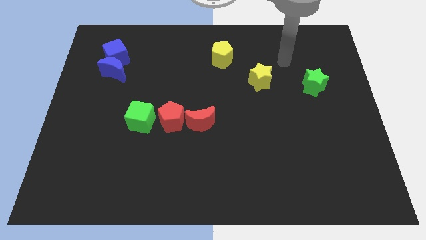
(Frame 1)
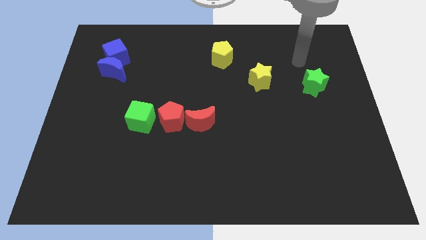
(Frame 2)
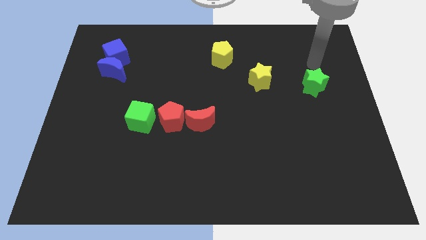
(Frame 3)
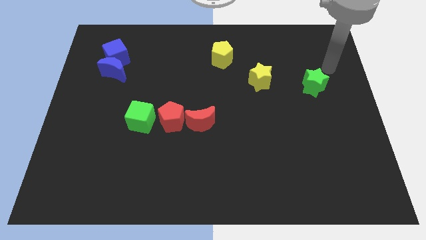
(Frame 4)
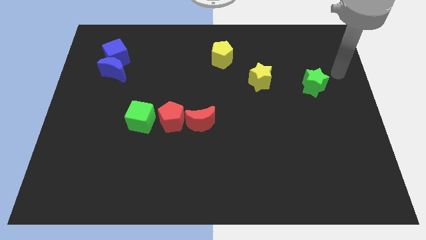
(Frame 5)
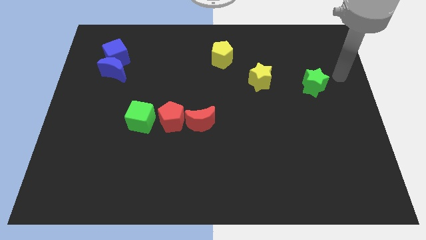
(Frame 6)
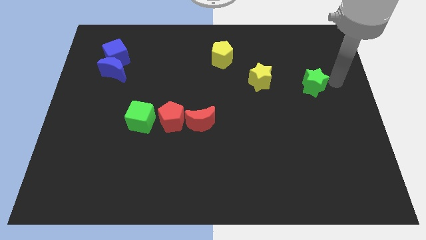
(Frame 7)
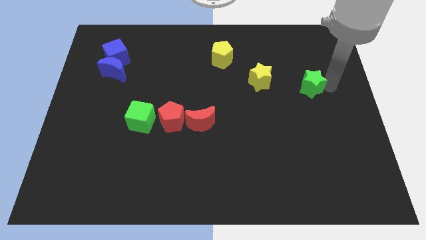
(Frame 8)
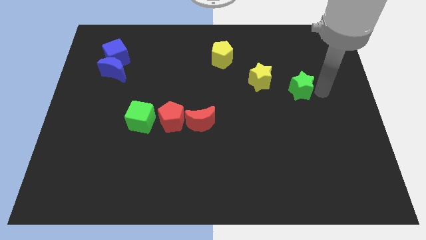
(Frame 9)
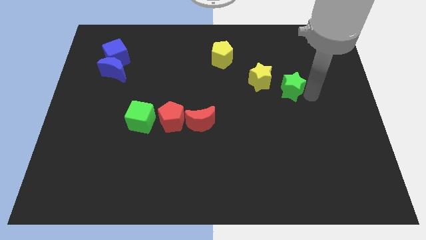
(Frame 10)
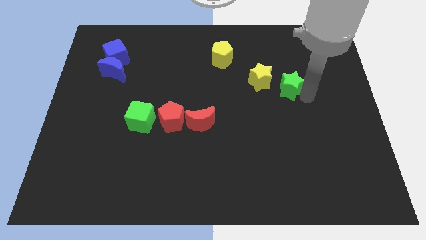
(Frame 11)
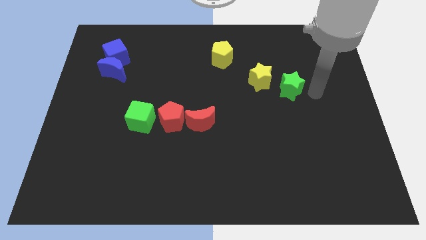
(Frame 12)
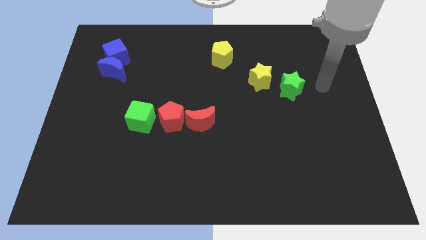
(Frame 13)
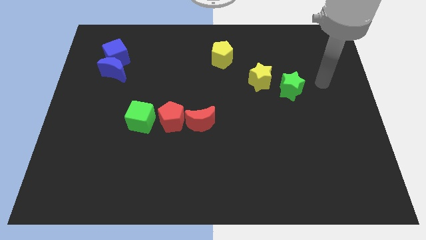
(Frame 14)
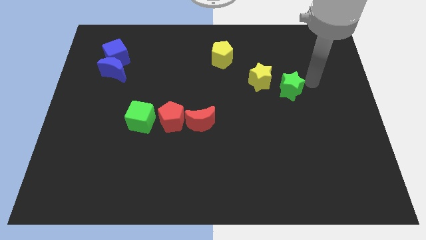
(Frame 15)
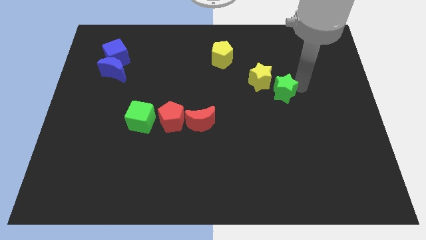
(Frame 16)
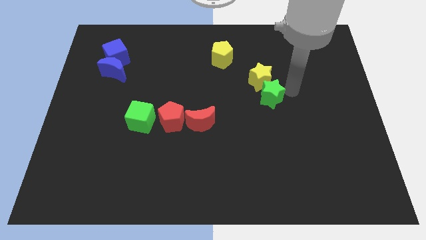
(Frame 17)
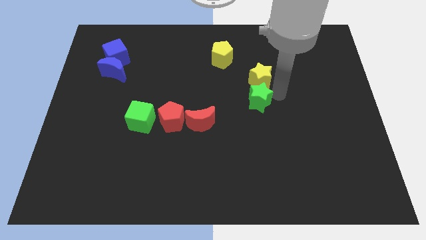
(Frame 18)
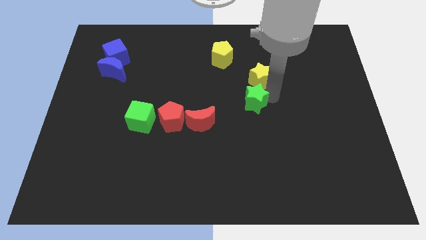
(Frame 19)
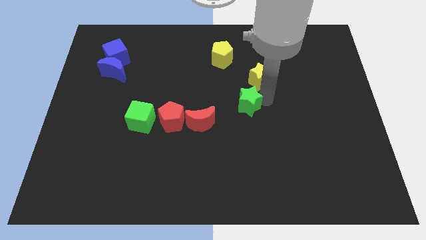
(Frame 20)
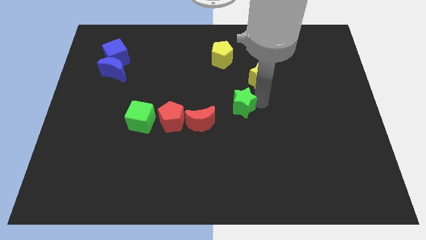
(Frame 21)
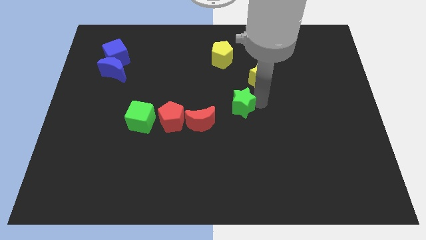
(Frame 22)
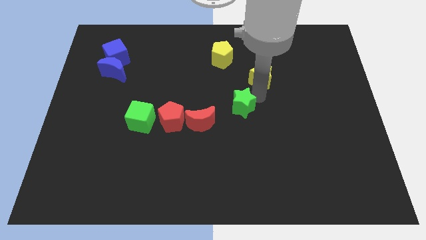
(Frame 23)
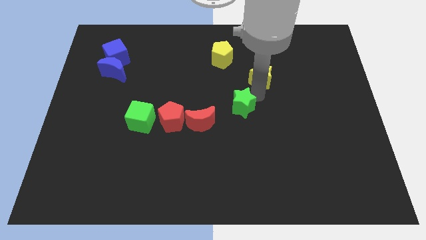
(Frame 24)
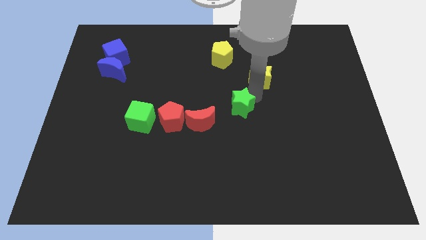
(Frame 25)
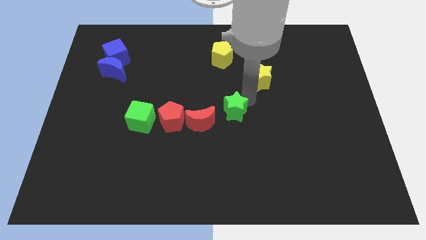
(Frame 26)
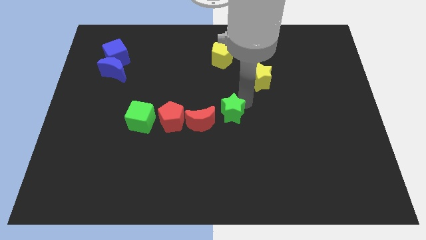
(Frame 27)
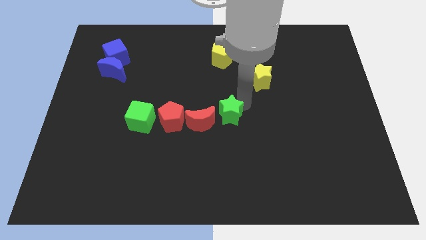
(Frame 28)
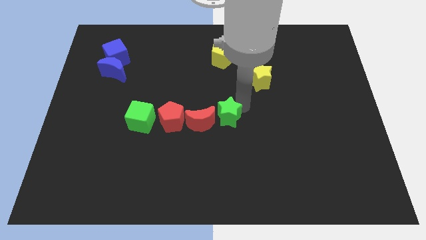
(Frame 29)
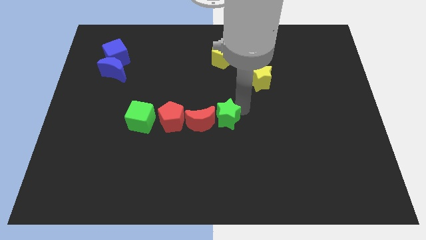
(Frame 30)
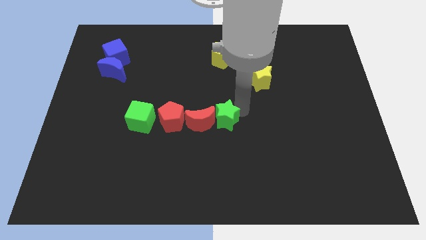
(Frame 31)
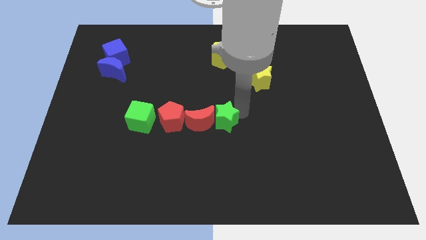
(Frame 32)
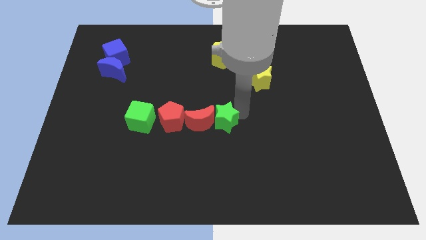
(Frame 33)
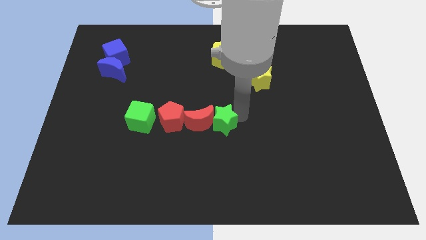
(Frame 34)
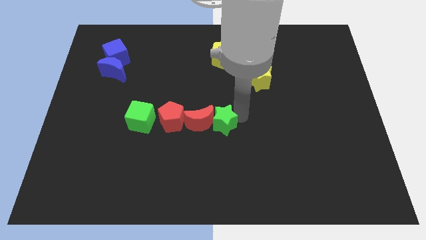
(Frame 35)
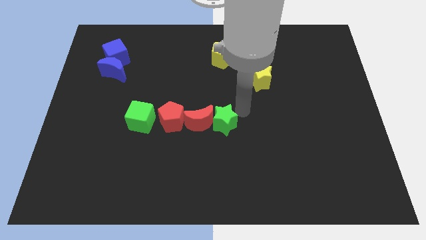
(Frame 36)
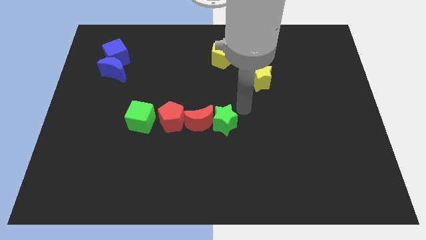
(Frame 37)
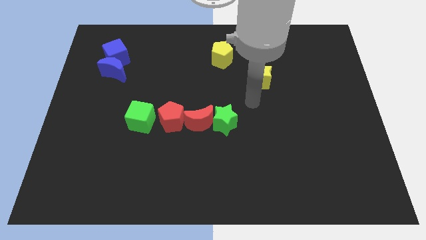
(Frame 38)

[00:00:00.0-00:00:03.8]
push the green star into red moon

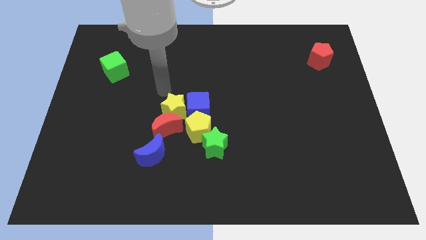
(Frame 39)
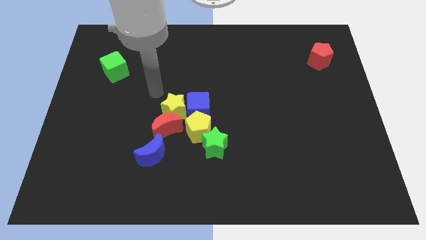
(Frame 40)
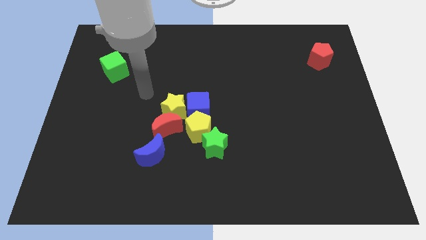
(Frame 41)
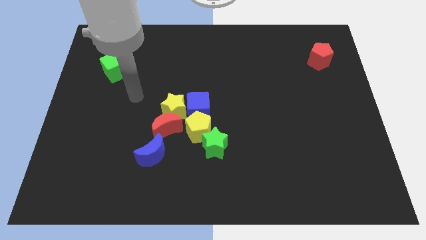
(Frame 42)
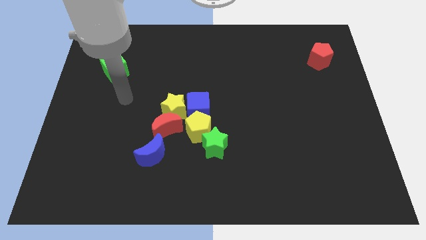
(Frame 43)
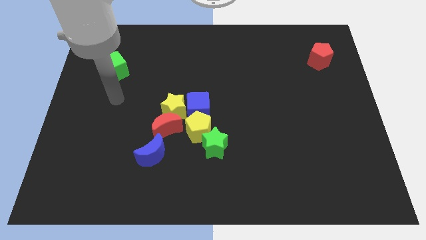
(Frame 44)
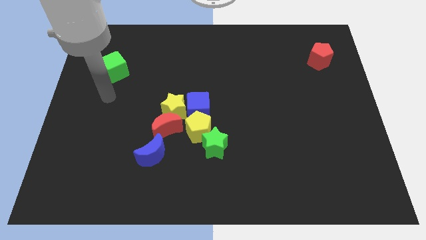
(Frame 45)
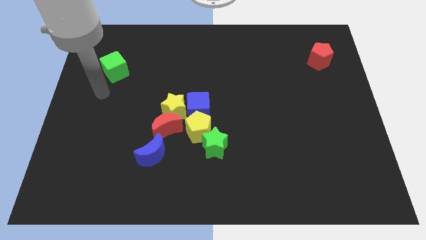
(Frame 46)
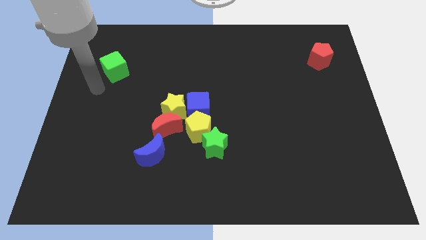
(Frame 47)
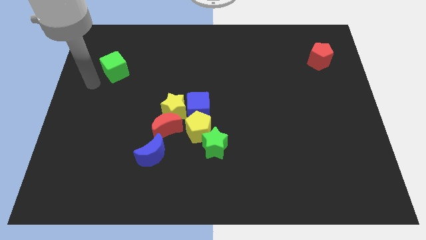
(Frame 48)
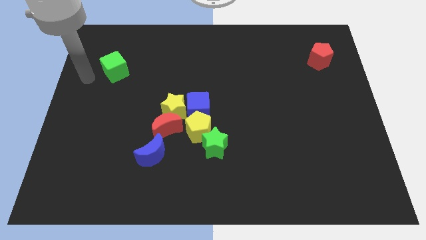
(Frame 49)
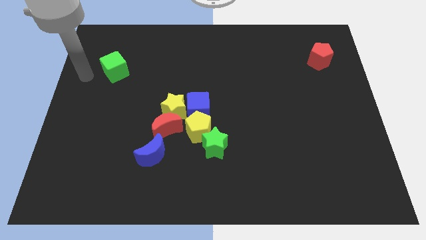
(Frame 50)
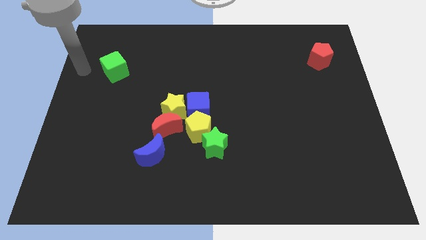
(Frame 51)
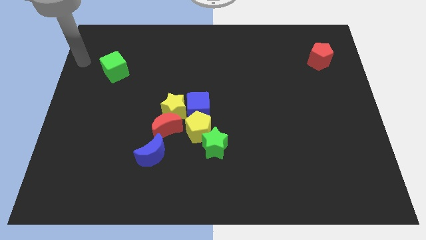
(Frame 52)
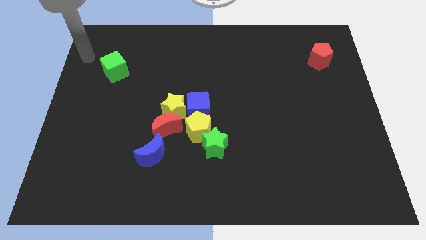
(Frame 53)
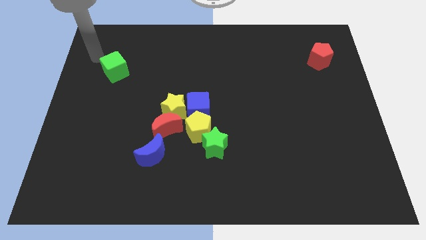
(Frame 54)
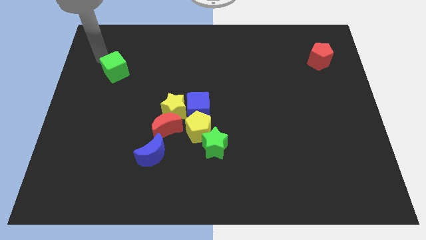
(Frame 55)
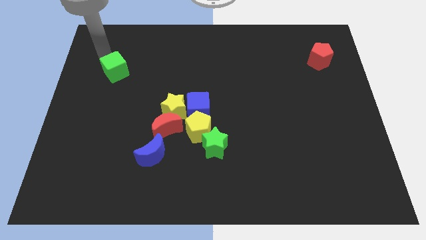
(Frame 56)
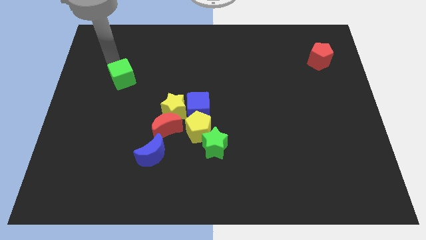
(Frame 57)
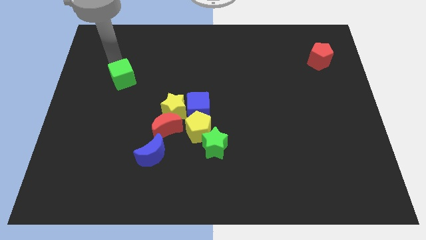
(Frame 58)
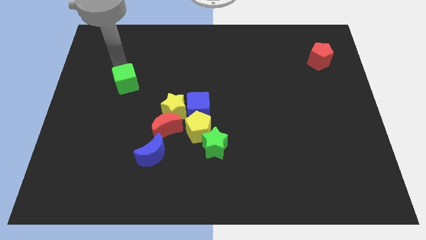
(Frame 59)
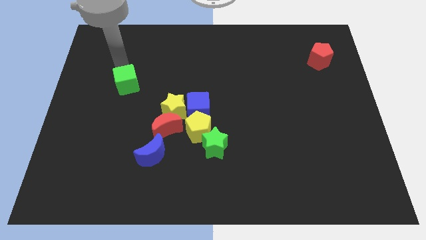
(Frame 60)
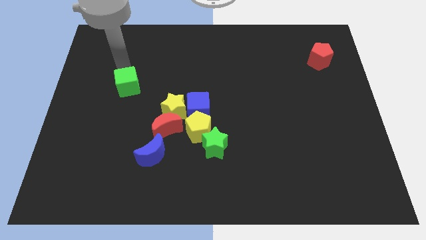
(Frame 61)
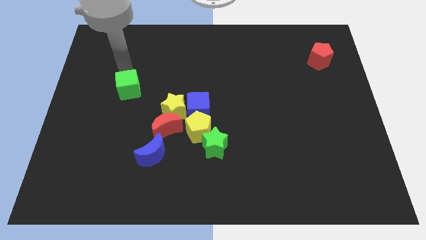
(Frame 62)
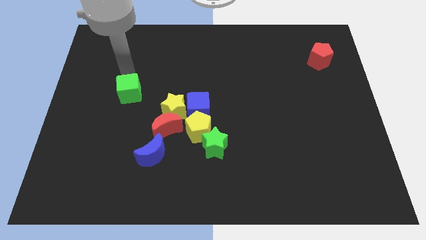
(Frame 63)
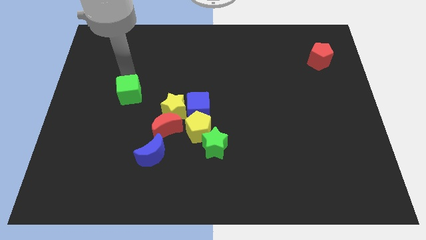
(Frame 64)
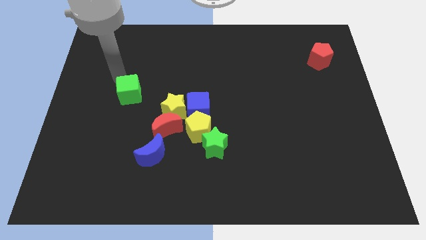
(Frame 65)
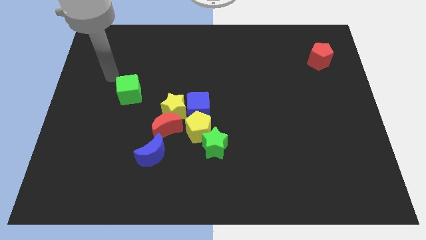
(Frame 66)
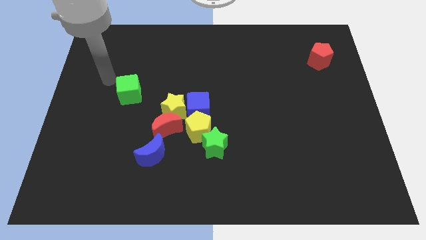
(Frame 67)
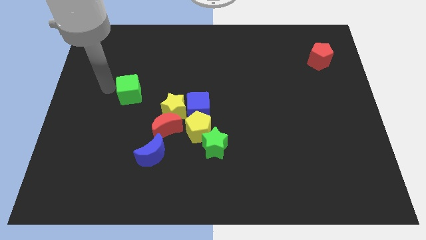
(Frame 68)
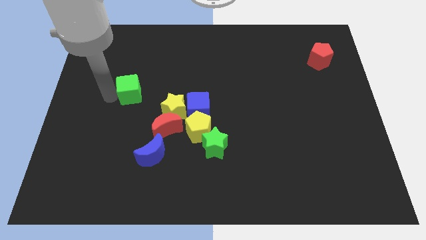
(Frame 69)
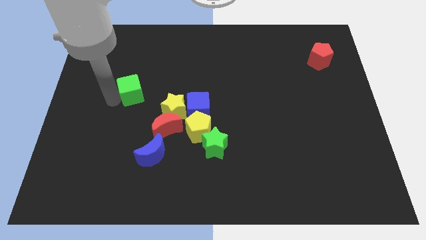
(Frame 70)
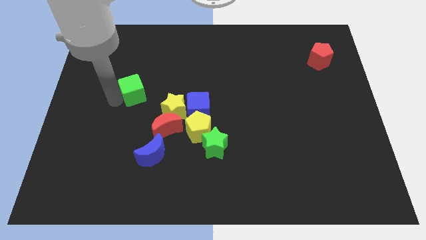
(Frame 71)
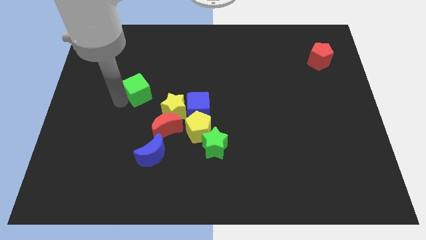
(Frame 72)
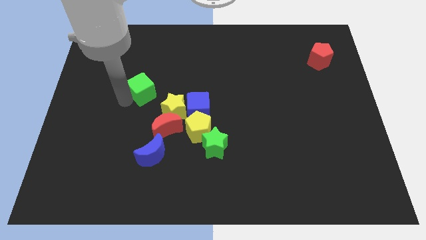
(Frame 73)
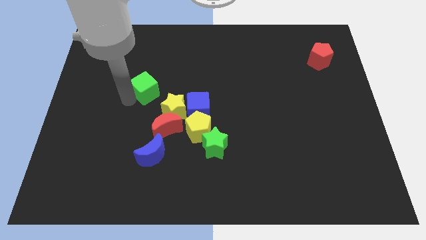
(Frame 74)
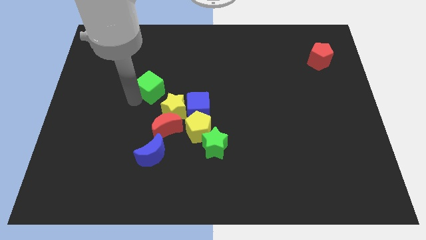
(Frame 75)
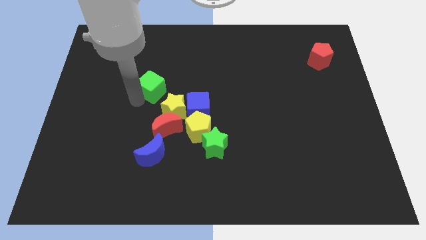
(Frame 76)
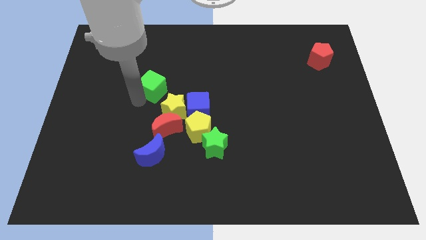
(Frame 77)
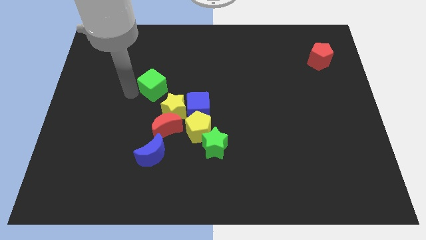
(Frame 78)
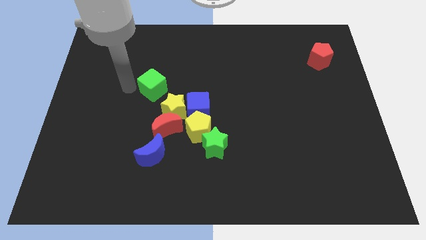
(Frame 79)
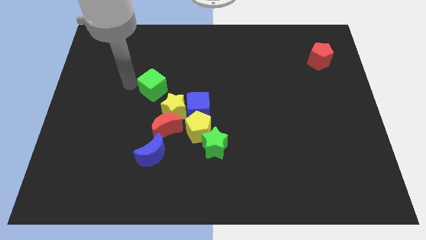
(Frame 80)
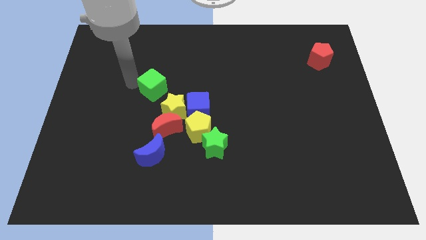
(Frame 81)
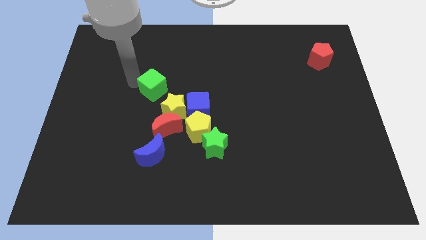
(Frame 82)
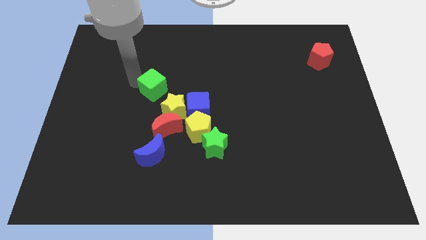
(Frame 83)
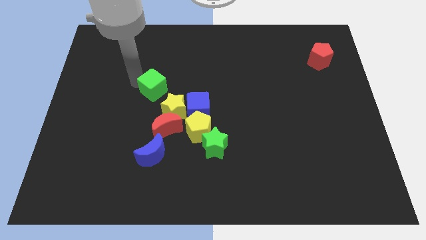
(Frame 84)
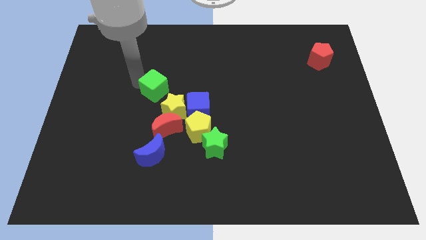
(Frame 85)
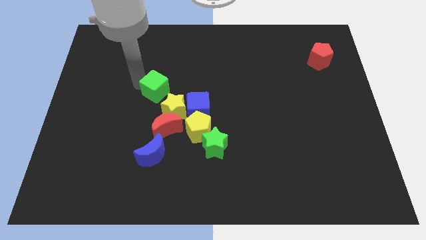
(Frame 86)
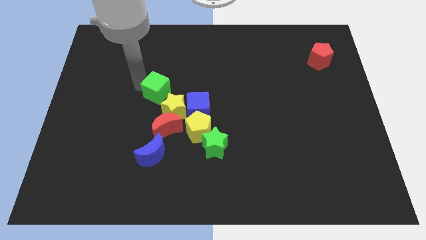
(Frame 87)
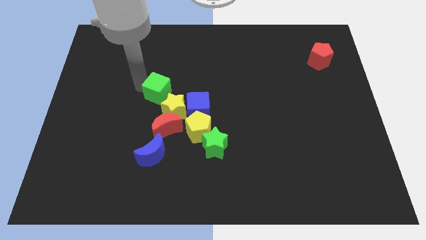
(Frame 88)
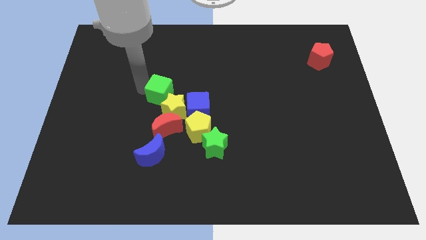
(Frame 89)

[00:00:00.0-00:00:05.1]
push the green cube into the group of blocks

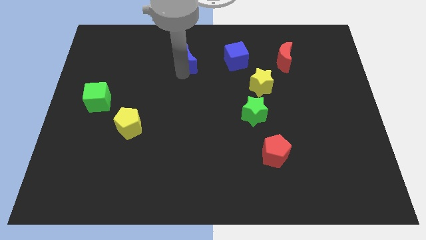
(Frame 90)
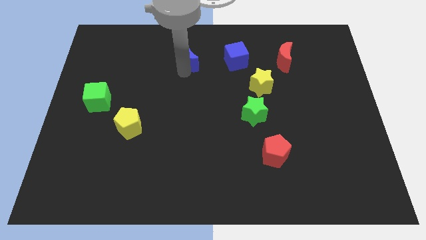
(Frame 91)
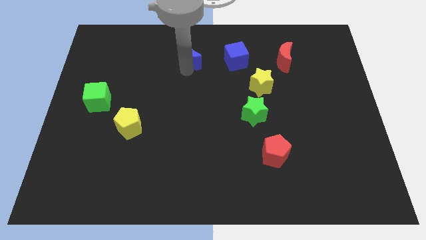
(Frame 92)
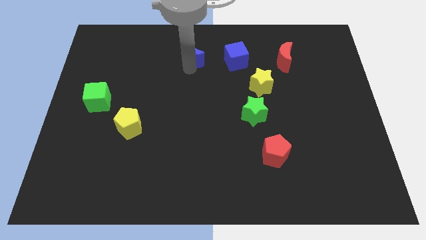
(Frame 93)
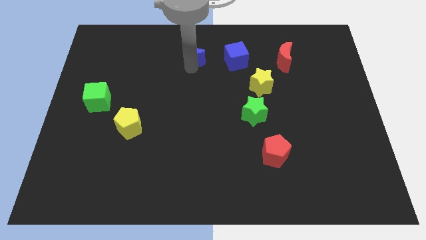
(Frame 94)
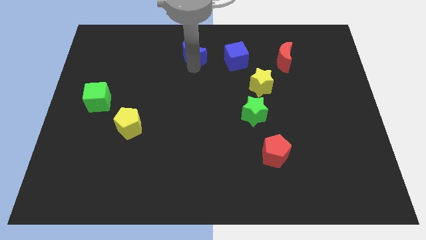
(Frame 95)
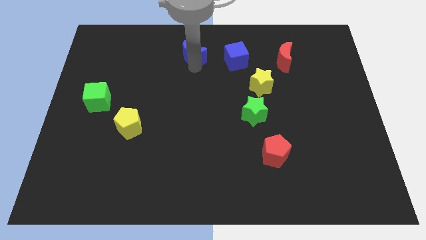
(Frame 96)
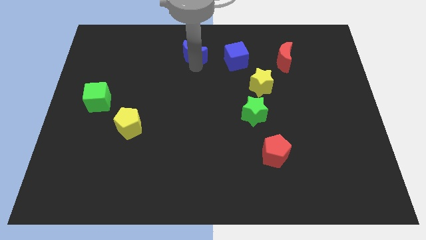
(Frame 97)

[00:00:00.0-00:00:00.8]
push the blue crescent to the left of the blue cube
